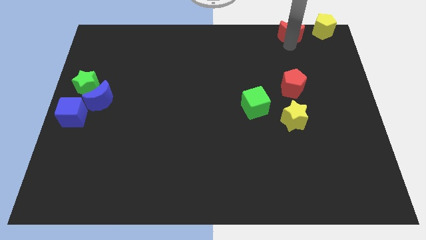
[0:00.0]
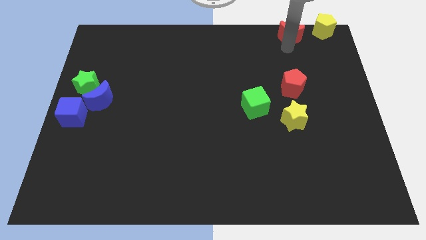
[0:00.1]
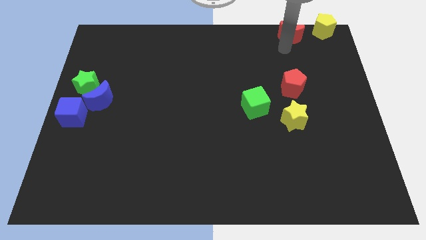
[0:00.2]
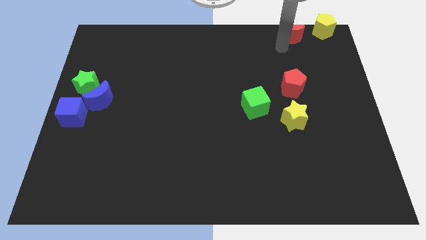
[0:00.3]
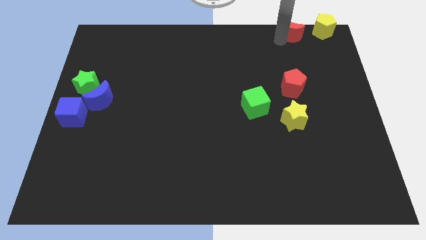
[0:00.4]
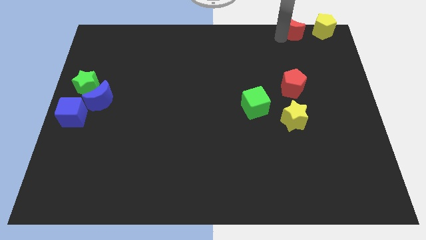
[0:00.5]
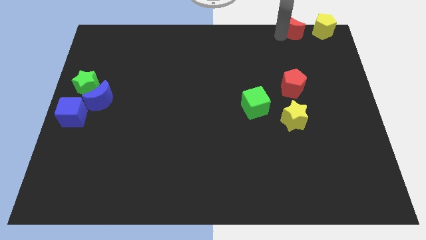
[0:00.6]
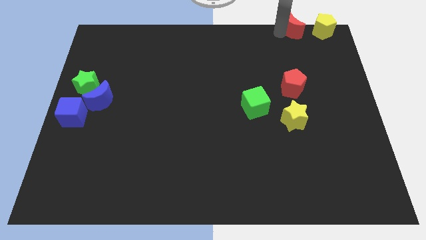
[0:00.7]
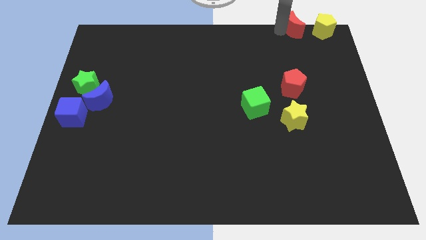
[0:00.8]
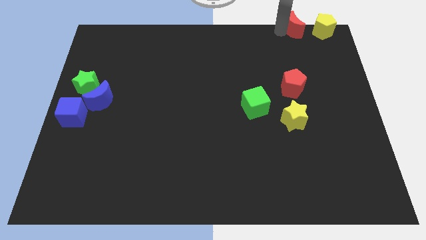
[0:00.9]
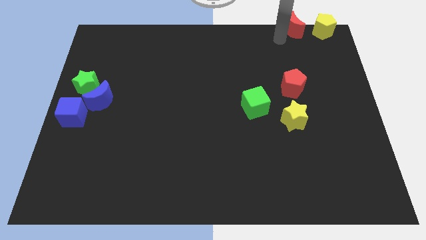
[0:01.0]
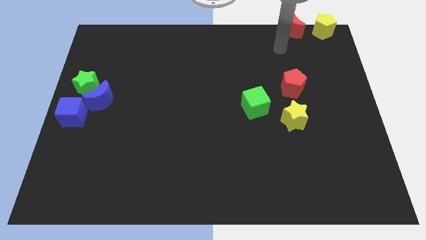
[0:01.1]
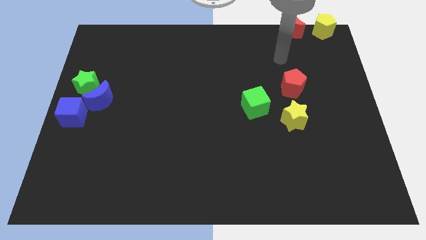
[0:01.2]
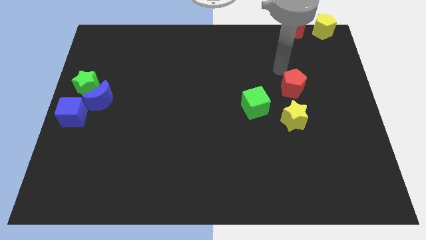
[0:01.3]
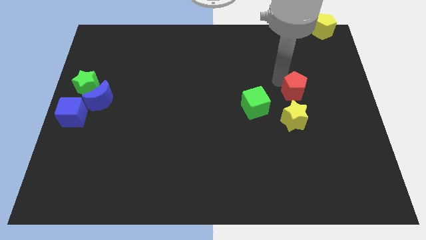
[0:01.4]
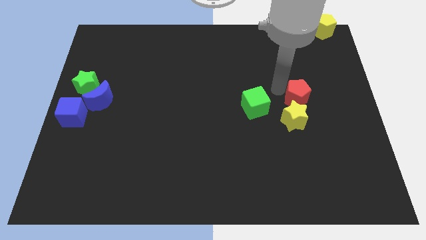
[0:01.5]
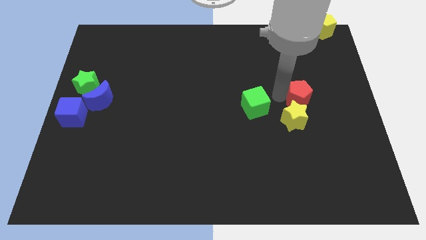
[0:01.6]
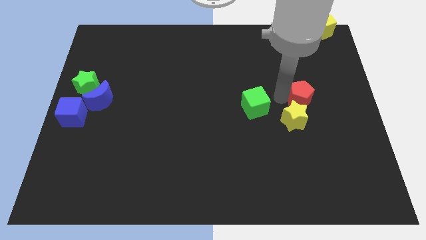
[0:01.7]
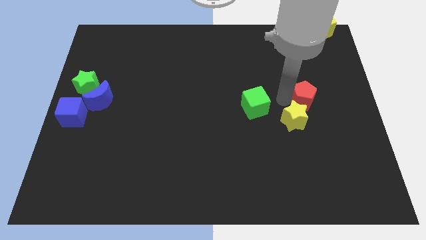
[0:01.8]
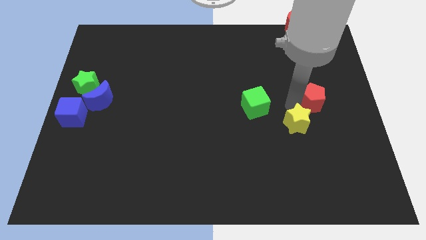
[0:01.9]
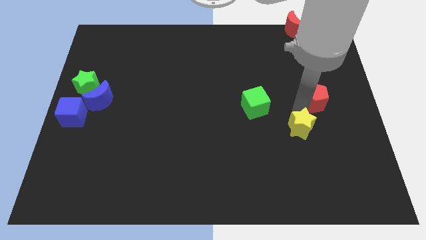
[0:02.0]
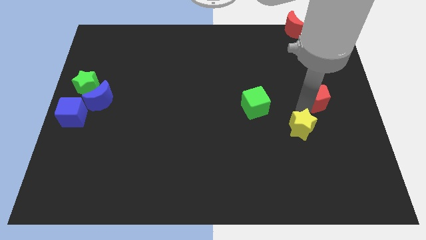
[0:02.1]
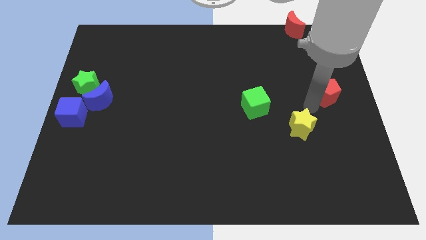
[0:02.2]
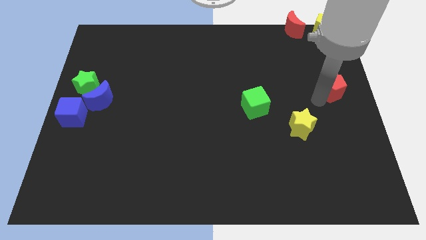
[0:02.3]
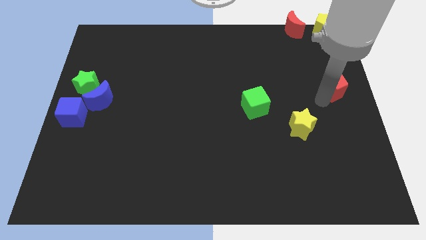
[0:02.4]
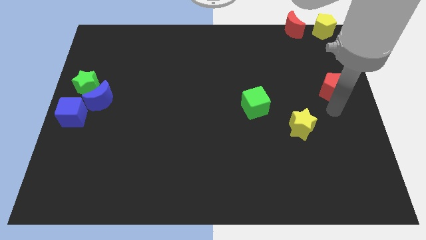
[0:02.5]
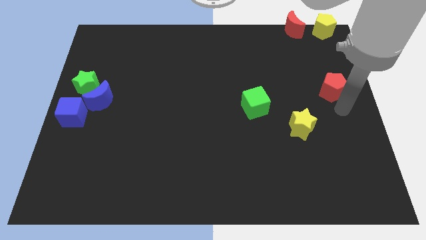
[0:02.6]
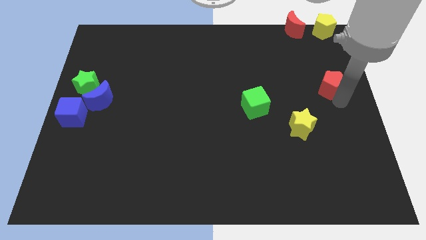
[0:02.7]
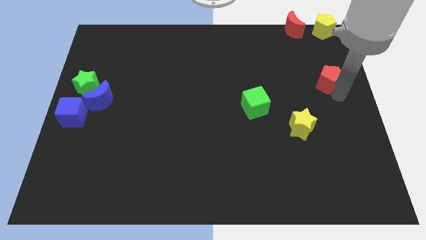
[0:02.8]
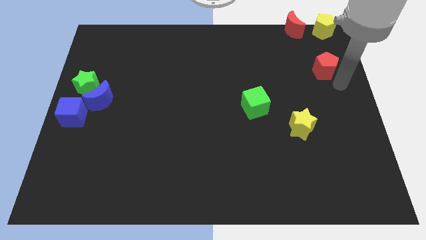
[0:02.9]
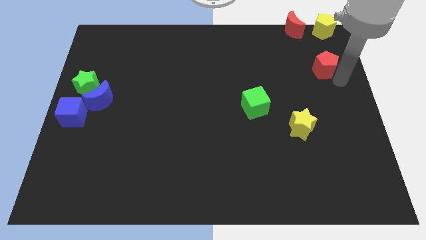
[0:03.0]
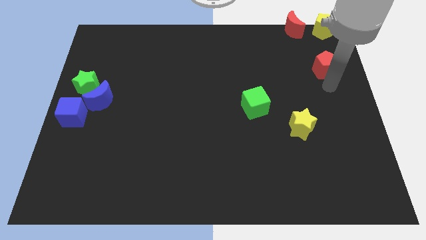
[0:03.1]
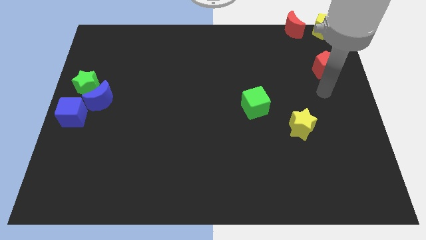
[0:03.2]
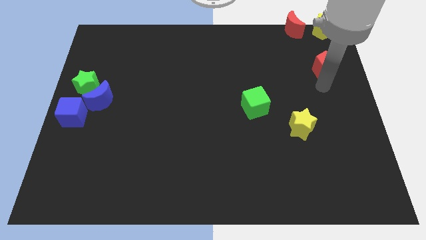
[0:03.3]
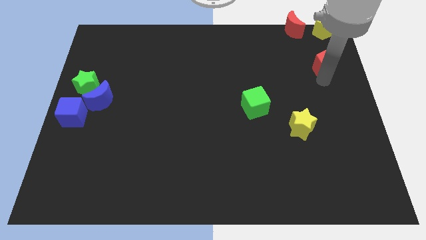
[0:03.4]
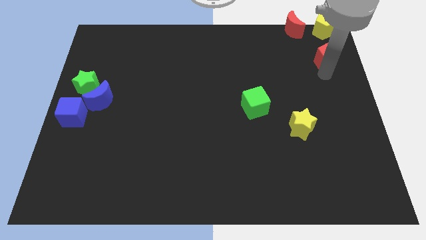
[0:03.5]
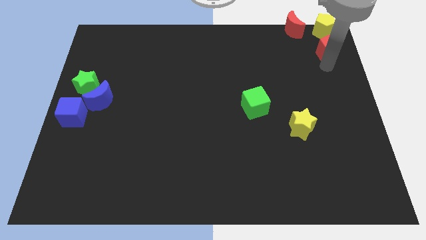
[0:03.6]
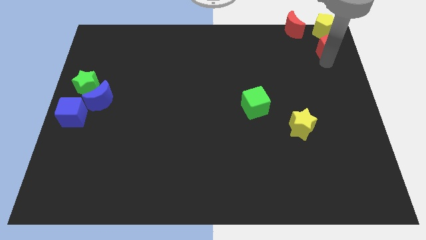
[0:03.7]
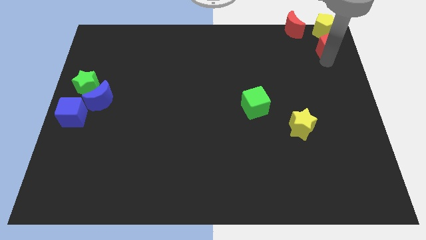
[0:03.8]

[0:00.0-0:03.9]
put the red pentagon underneath the yellow pentagon

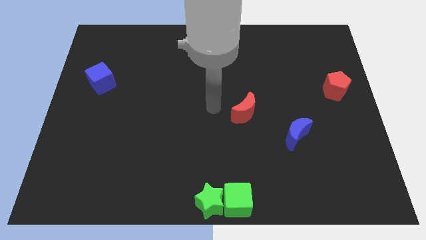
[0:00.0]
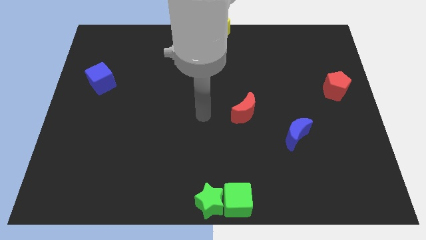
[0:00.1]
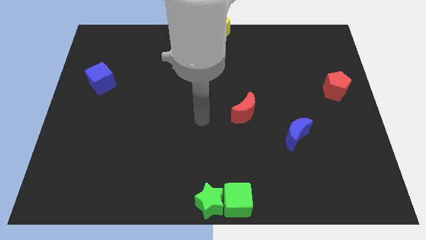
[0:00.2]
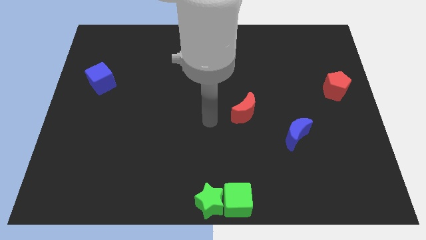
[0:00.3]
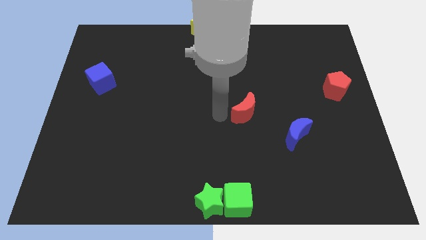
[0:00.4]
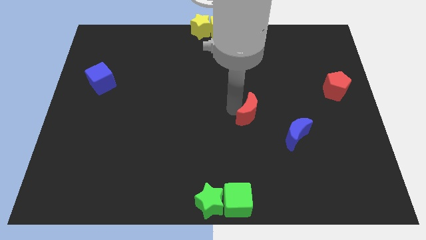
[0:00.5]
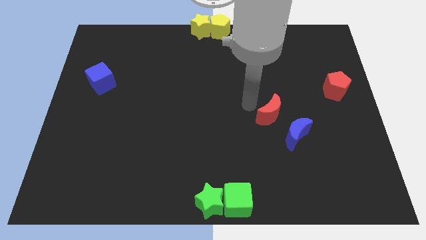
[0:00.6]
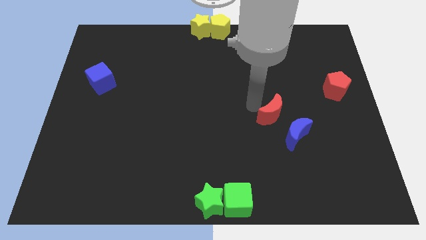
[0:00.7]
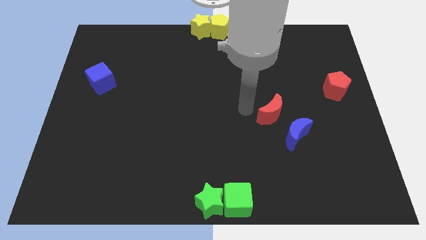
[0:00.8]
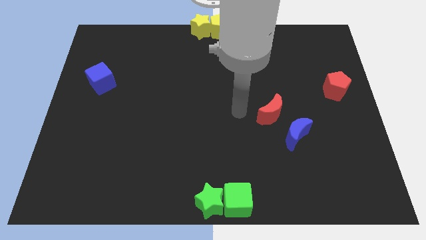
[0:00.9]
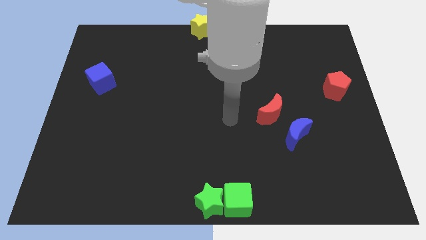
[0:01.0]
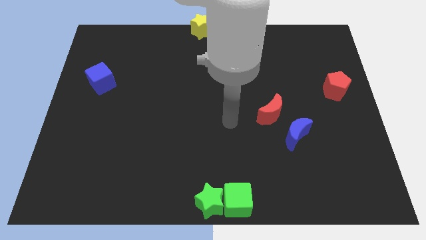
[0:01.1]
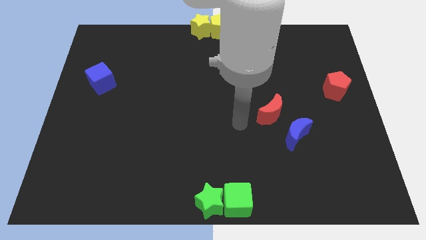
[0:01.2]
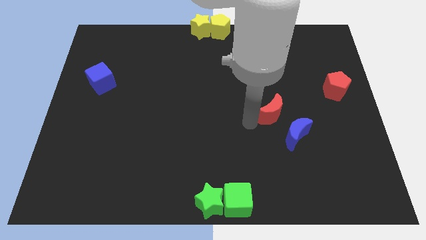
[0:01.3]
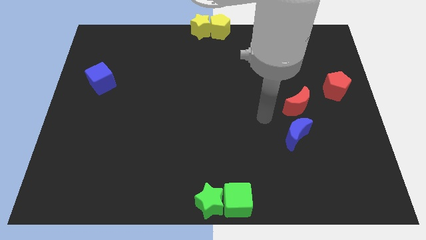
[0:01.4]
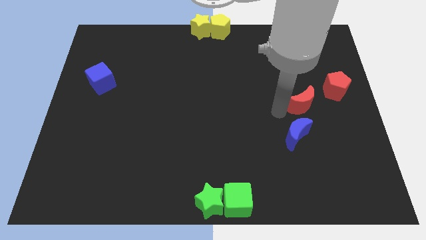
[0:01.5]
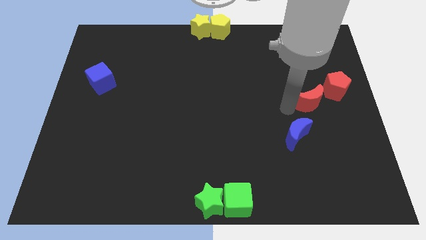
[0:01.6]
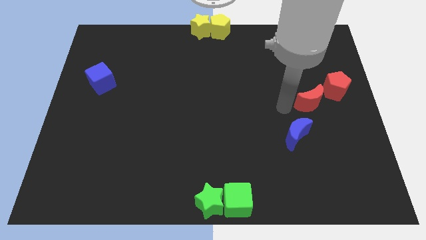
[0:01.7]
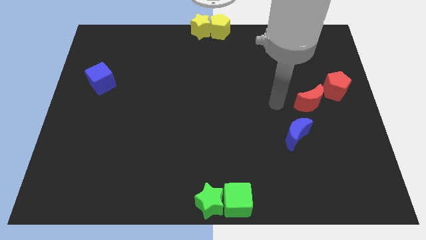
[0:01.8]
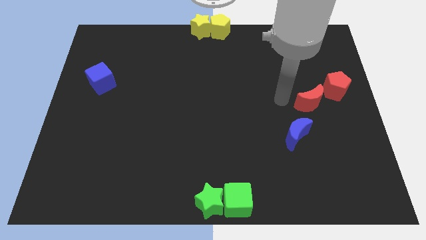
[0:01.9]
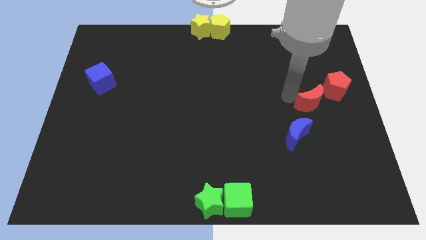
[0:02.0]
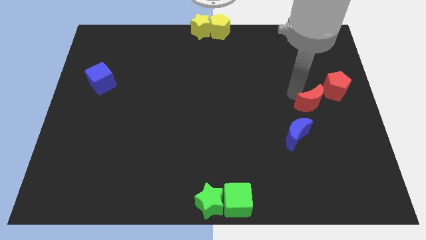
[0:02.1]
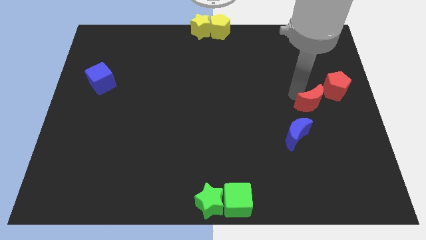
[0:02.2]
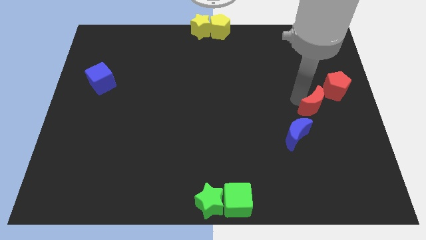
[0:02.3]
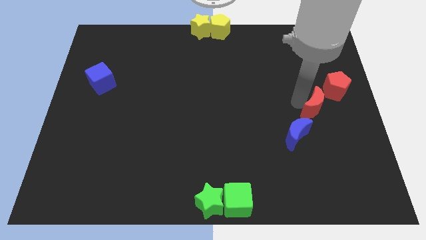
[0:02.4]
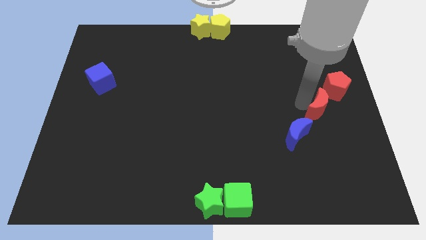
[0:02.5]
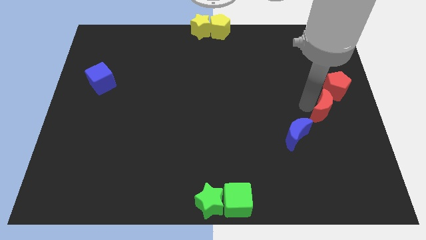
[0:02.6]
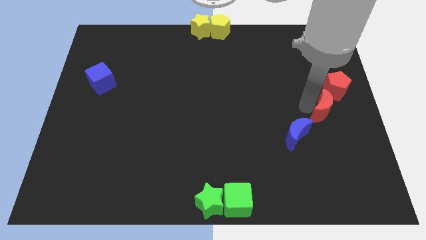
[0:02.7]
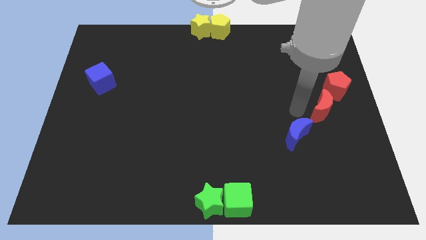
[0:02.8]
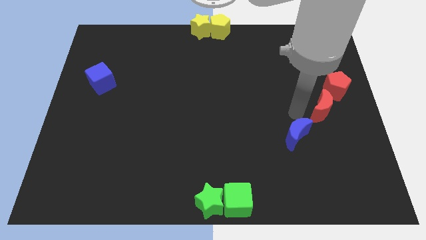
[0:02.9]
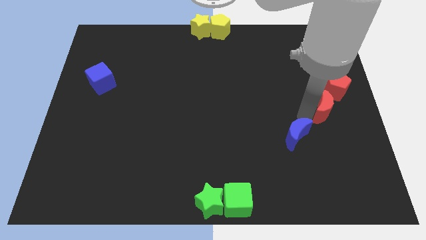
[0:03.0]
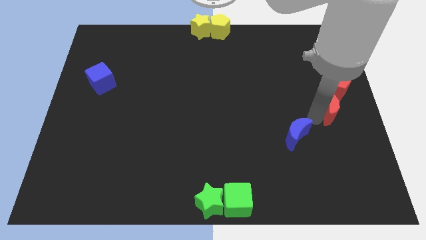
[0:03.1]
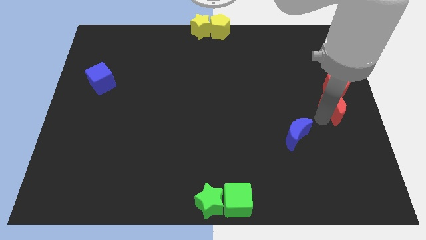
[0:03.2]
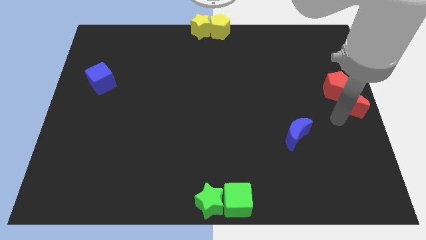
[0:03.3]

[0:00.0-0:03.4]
drag the red moon below the red pentagon

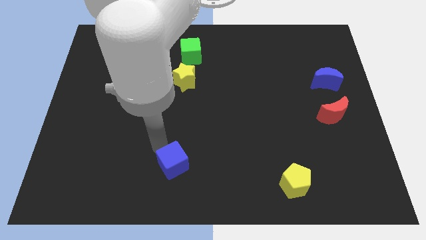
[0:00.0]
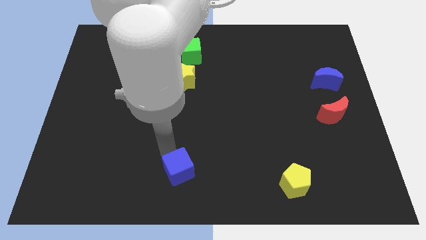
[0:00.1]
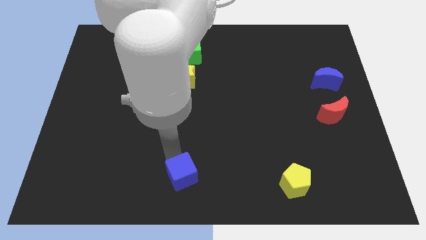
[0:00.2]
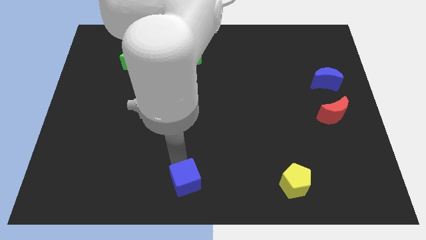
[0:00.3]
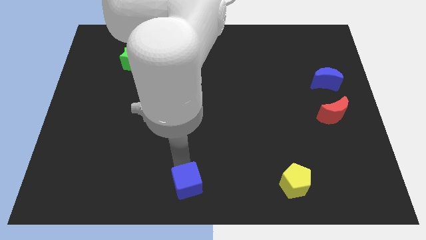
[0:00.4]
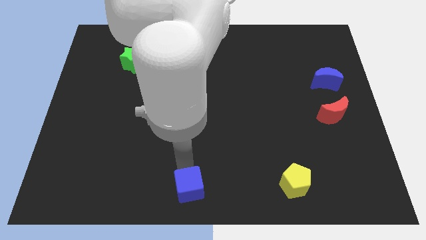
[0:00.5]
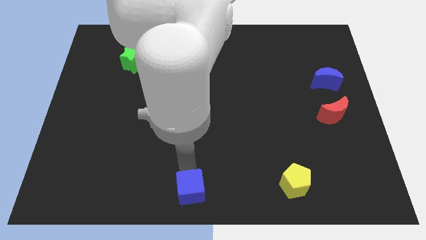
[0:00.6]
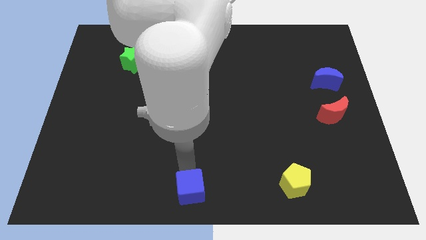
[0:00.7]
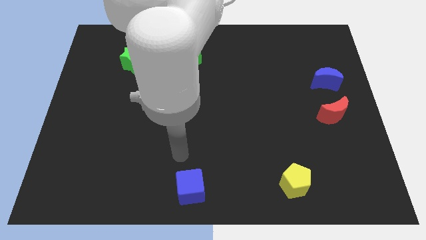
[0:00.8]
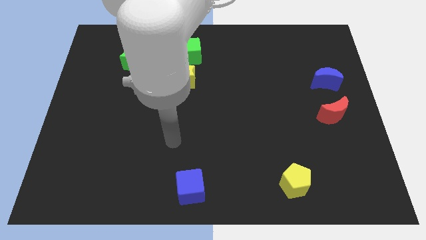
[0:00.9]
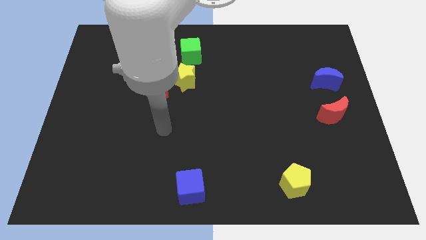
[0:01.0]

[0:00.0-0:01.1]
push the blue cube to the bottom center of the board

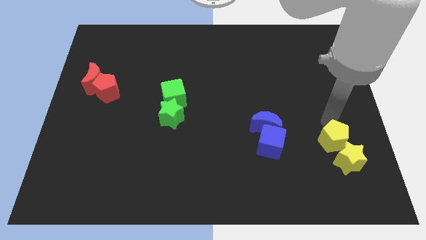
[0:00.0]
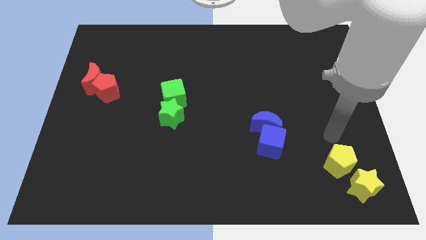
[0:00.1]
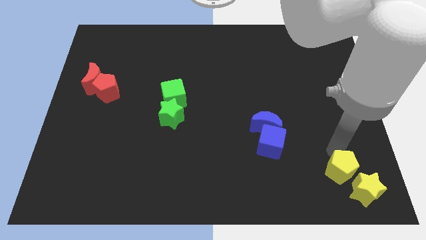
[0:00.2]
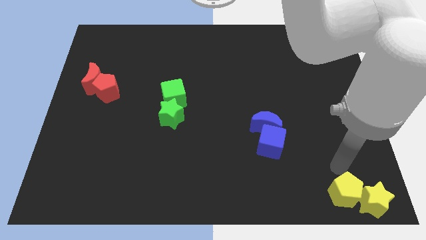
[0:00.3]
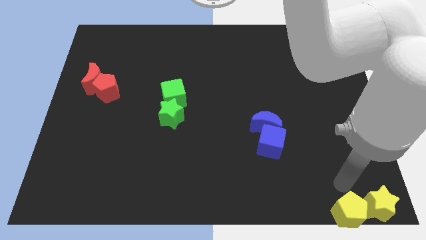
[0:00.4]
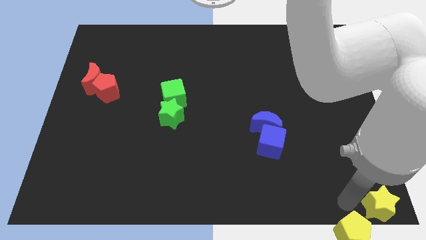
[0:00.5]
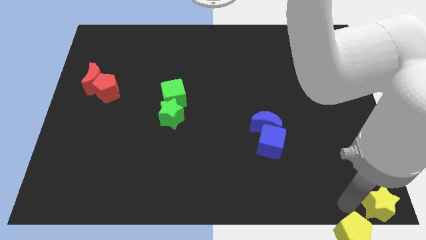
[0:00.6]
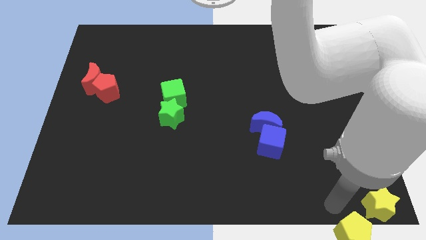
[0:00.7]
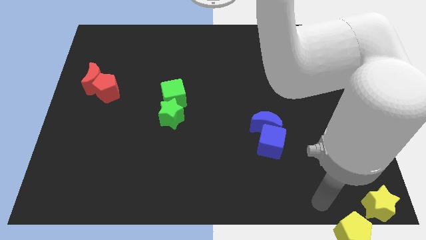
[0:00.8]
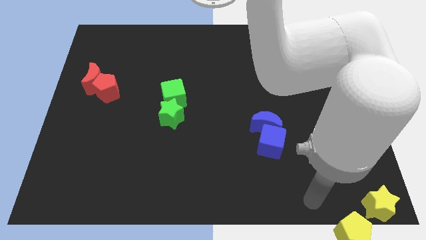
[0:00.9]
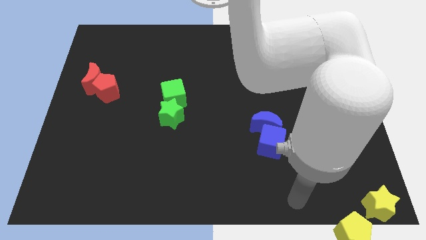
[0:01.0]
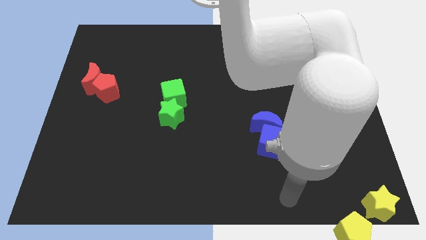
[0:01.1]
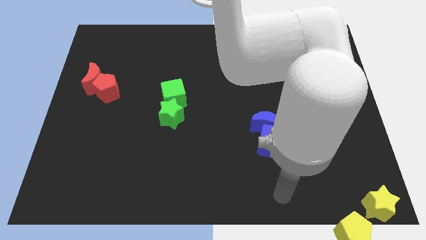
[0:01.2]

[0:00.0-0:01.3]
push the yellow star with the yellow pentagon
